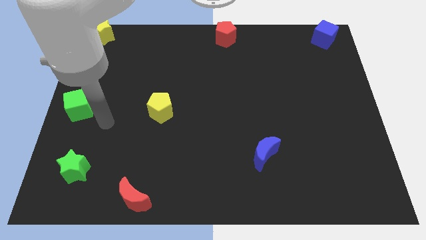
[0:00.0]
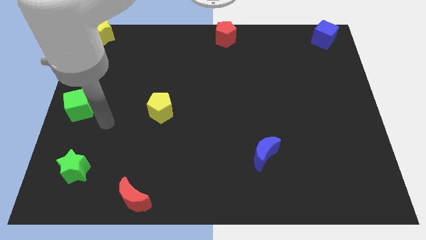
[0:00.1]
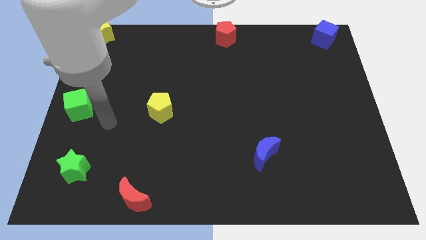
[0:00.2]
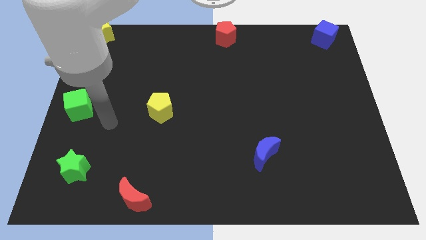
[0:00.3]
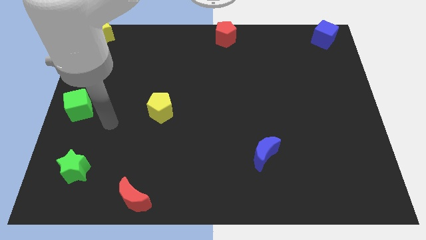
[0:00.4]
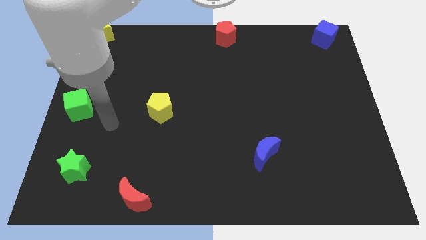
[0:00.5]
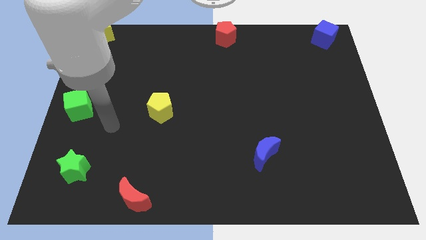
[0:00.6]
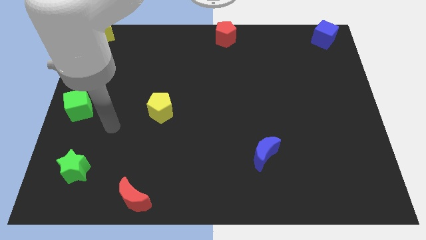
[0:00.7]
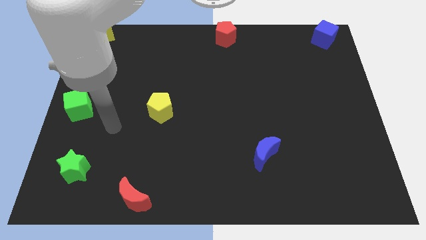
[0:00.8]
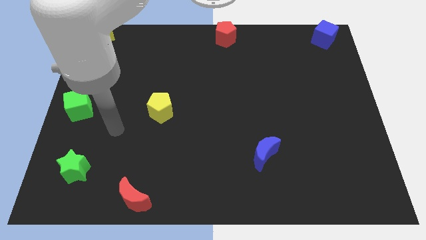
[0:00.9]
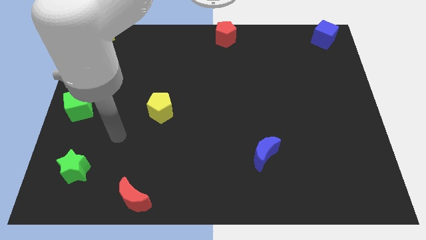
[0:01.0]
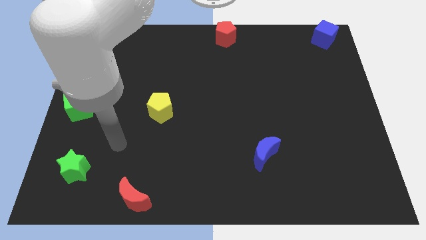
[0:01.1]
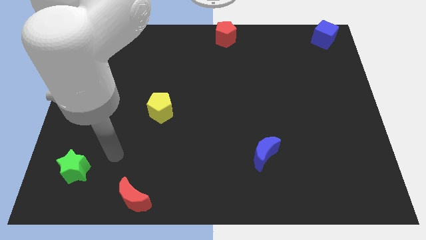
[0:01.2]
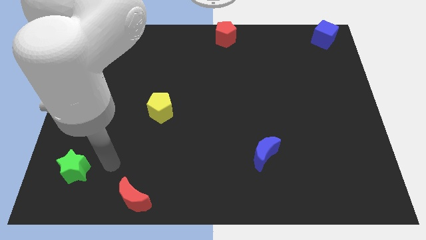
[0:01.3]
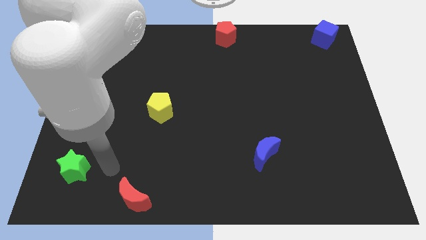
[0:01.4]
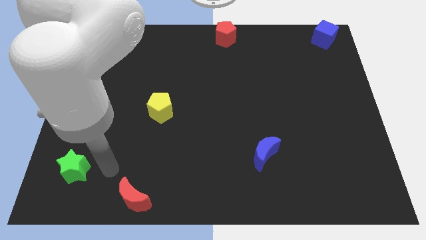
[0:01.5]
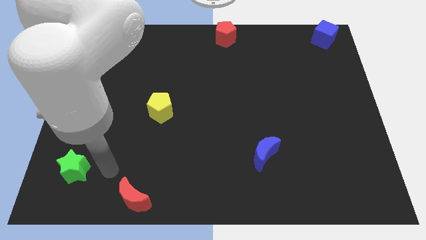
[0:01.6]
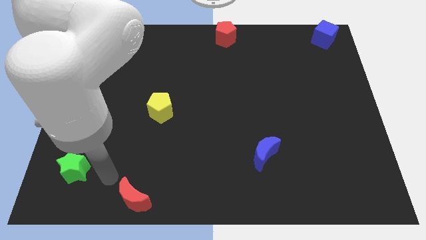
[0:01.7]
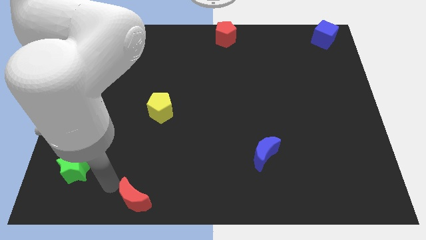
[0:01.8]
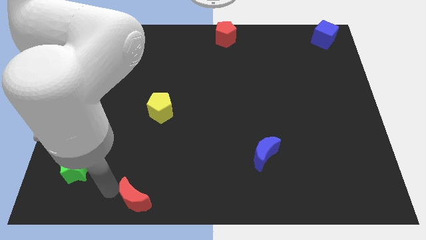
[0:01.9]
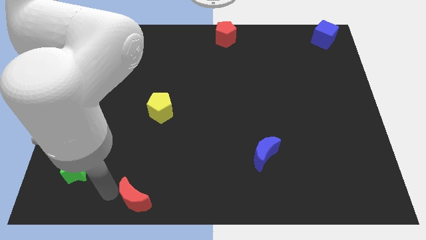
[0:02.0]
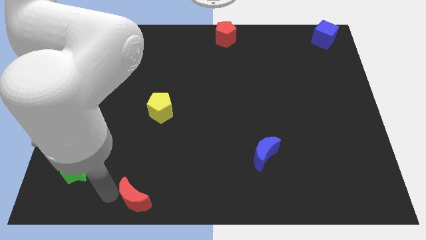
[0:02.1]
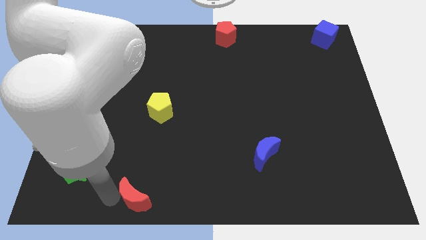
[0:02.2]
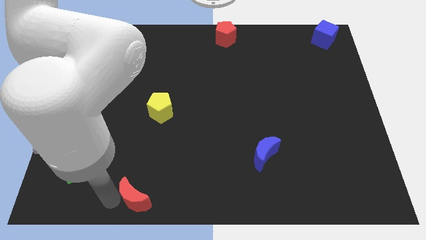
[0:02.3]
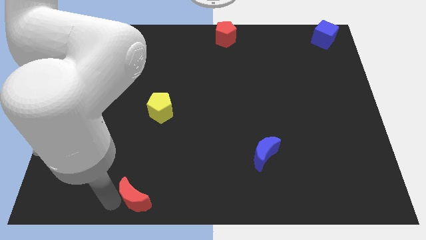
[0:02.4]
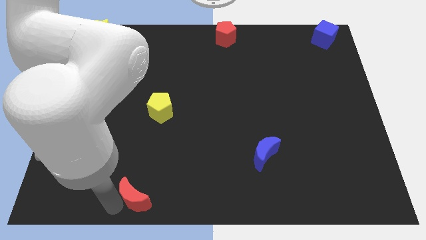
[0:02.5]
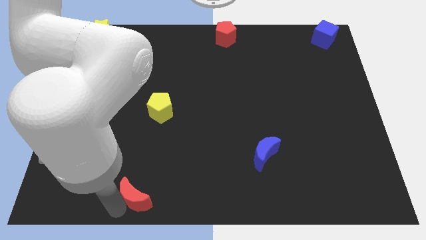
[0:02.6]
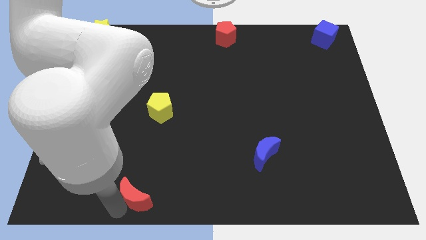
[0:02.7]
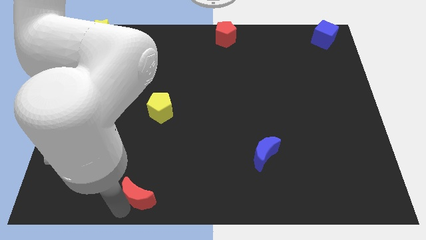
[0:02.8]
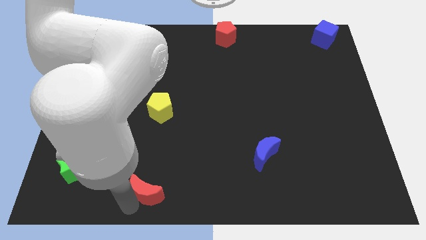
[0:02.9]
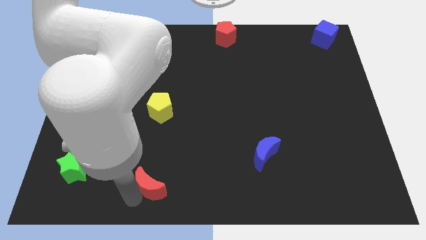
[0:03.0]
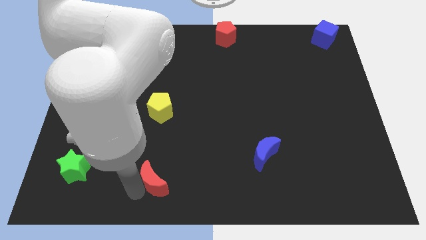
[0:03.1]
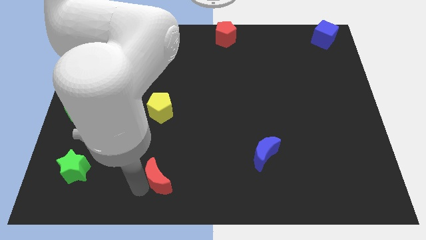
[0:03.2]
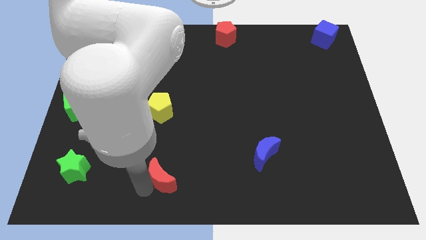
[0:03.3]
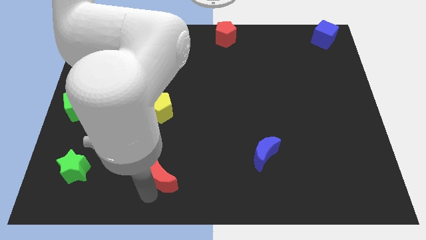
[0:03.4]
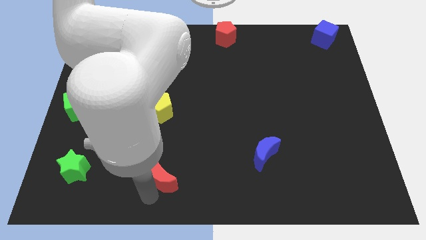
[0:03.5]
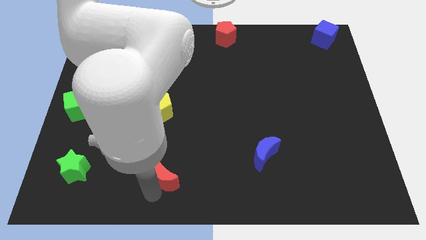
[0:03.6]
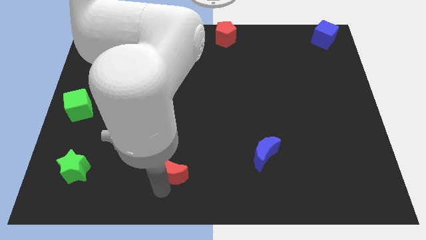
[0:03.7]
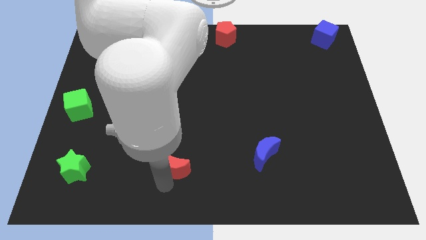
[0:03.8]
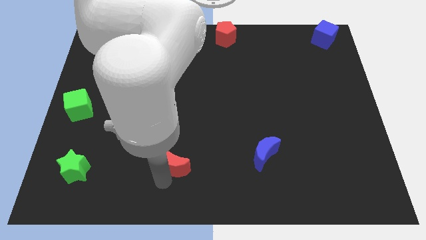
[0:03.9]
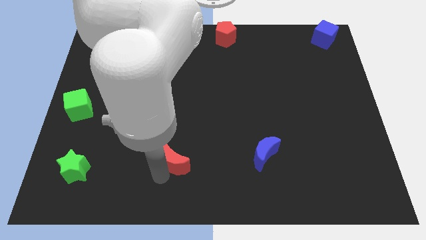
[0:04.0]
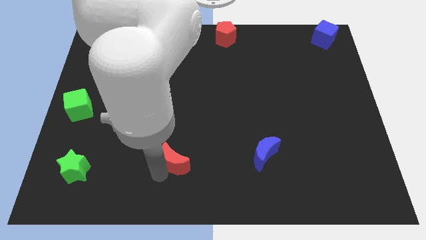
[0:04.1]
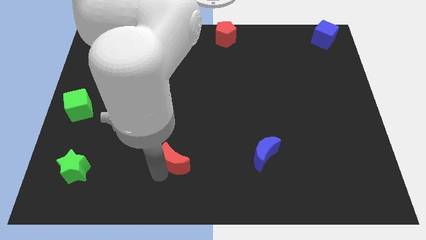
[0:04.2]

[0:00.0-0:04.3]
move red crescent up

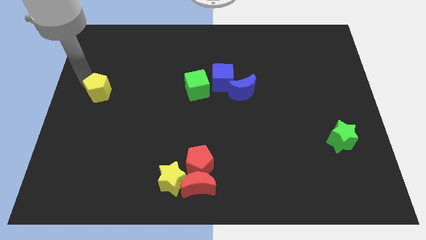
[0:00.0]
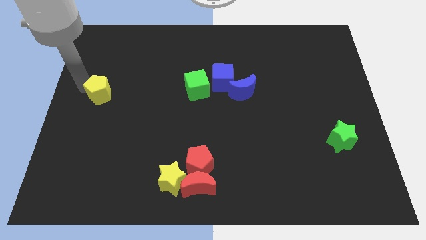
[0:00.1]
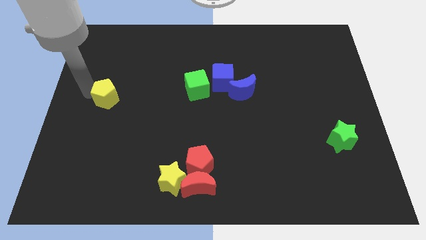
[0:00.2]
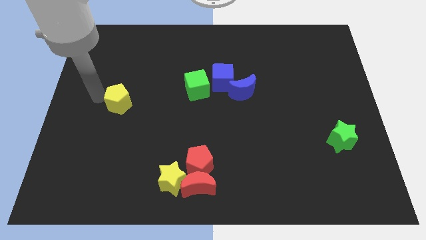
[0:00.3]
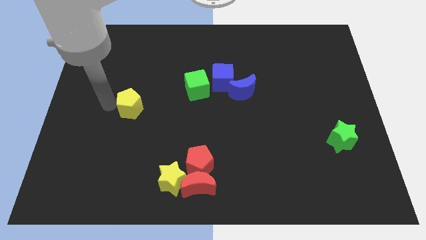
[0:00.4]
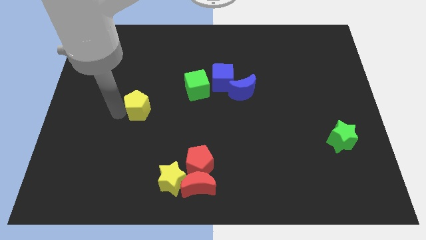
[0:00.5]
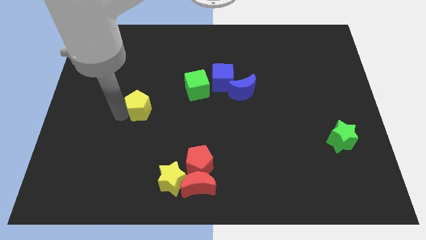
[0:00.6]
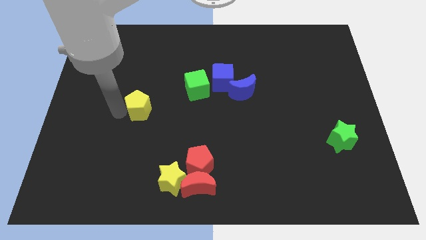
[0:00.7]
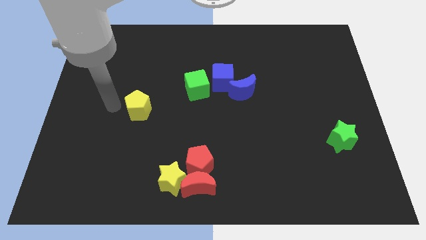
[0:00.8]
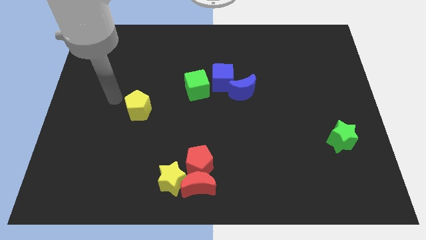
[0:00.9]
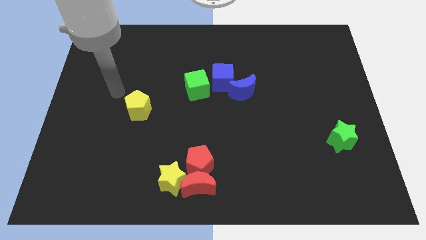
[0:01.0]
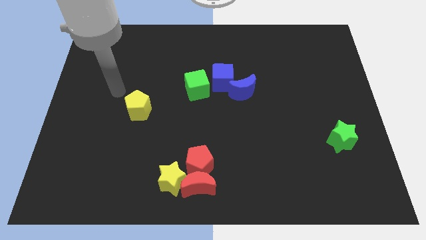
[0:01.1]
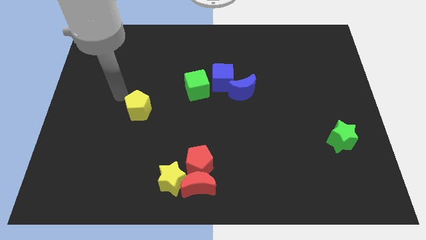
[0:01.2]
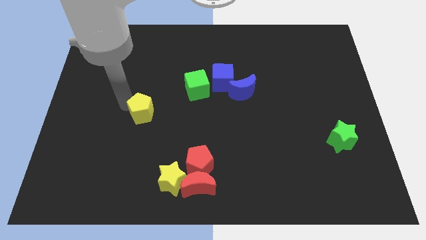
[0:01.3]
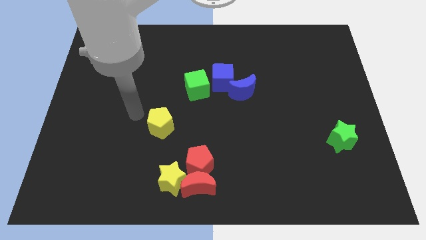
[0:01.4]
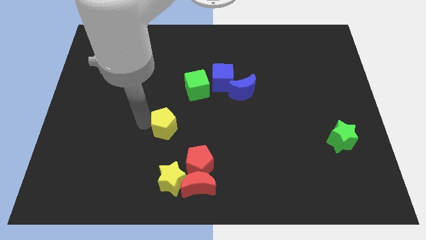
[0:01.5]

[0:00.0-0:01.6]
move the yellow pentagon towards the top side of the red pentagon

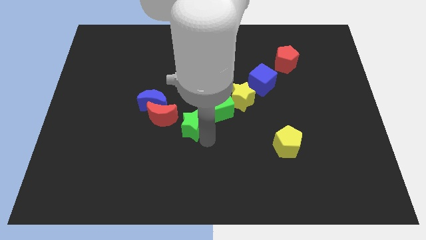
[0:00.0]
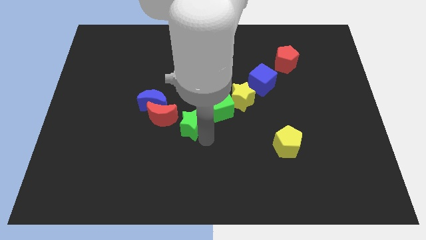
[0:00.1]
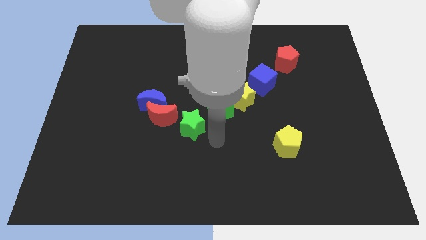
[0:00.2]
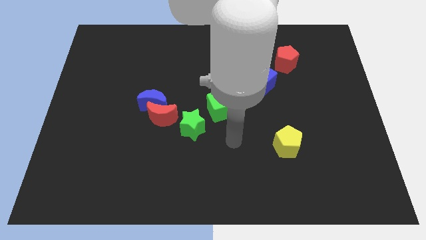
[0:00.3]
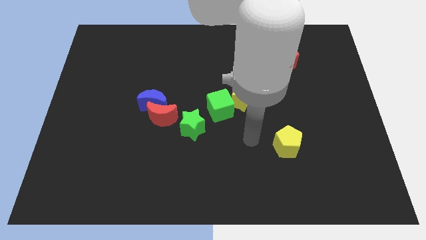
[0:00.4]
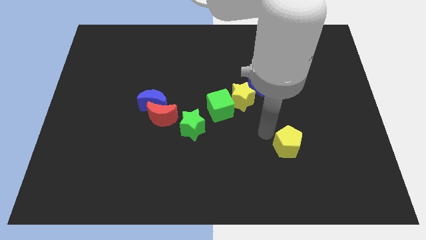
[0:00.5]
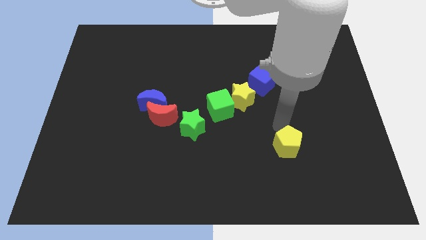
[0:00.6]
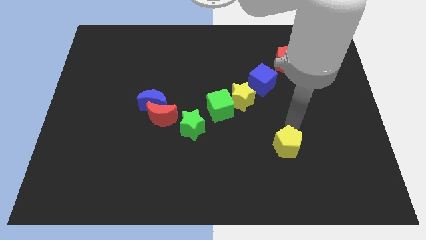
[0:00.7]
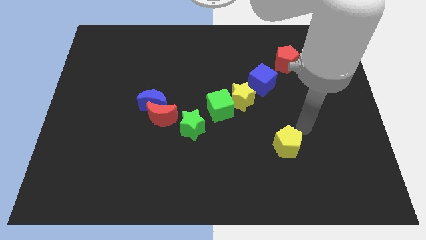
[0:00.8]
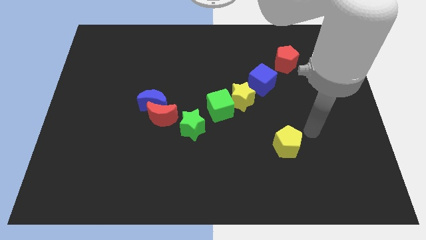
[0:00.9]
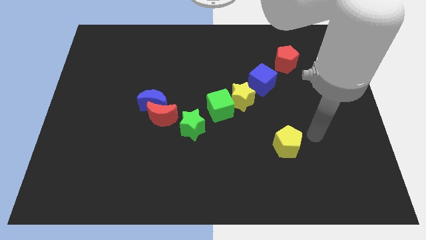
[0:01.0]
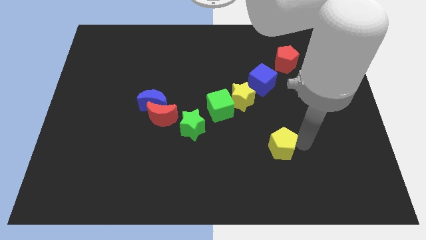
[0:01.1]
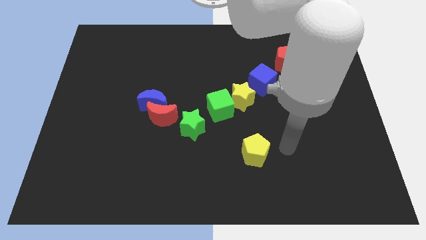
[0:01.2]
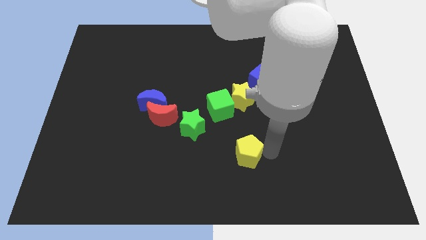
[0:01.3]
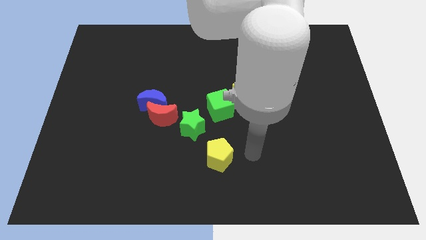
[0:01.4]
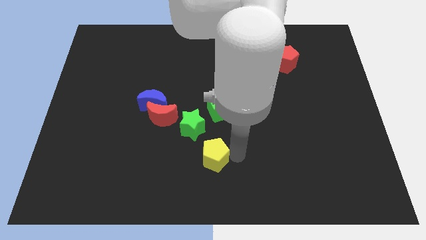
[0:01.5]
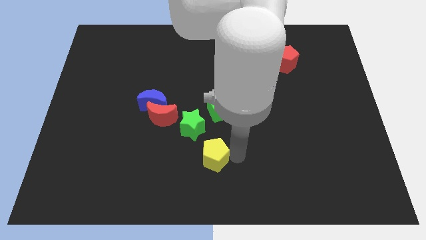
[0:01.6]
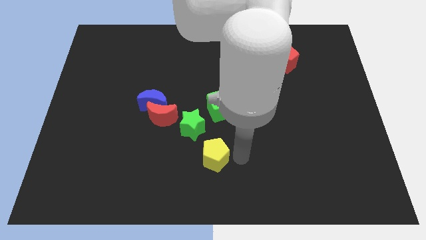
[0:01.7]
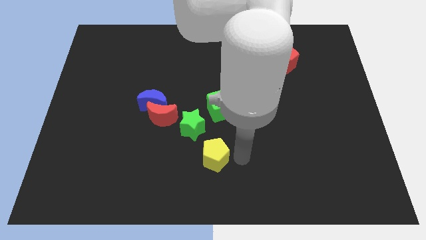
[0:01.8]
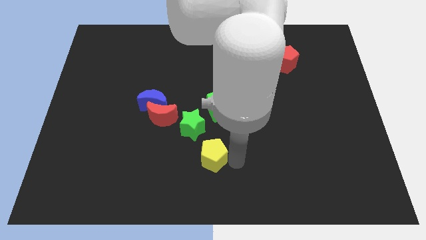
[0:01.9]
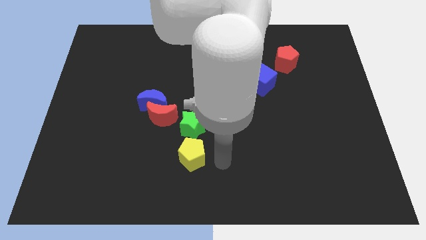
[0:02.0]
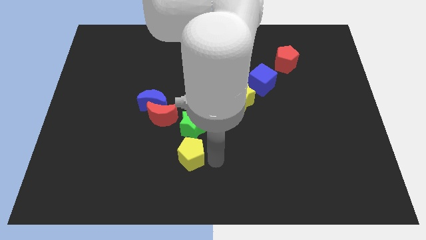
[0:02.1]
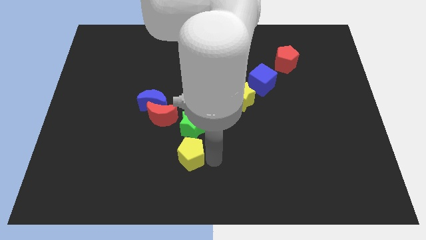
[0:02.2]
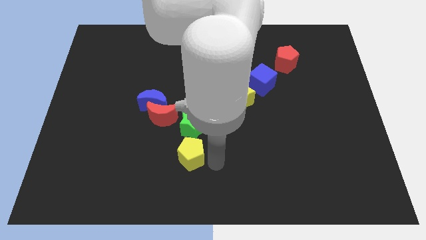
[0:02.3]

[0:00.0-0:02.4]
move the yellow pentagon below the green star

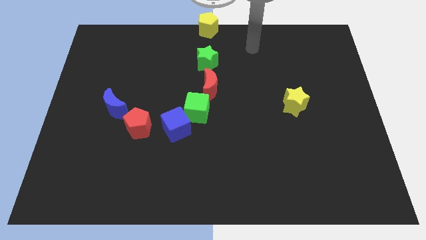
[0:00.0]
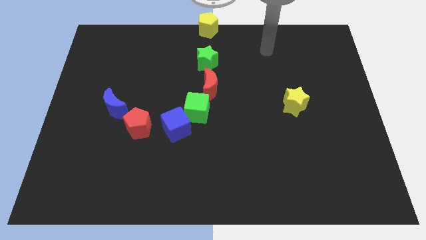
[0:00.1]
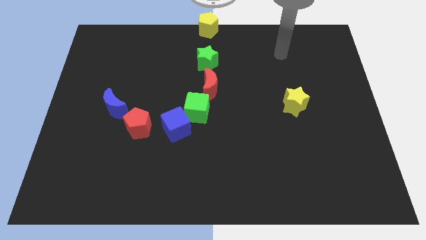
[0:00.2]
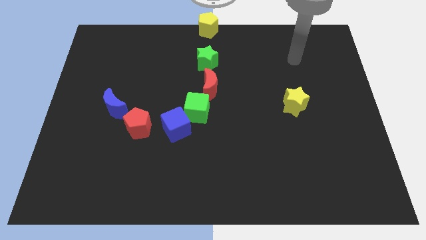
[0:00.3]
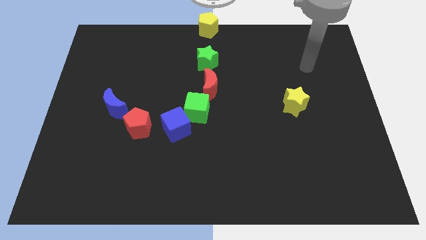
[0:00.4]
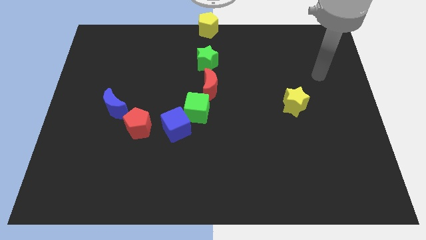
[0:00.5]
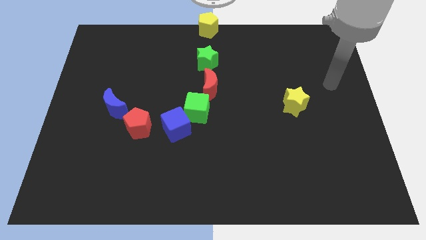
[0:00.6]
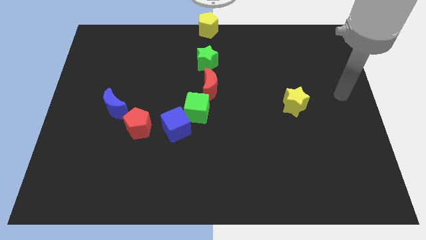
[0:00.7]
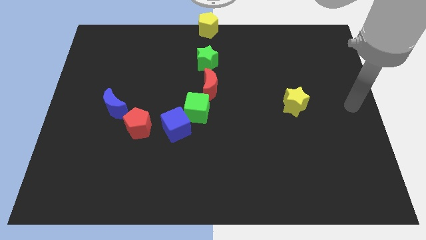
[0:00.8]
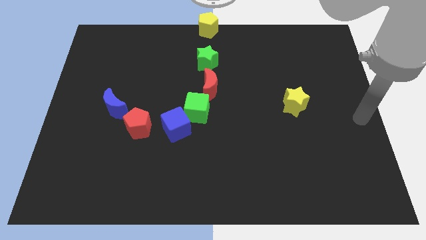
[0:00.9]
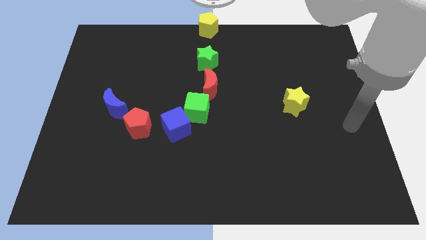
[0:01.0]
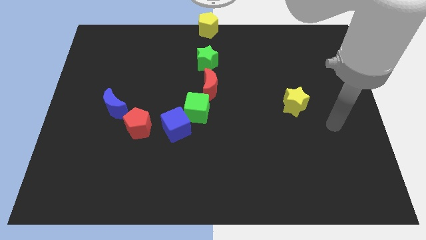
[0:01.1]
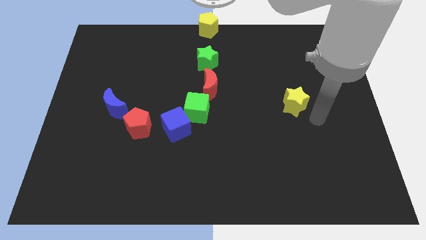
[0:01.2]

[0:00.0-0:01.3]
move your arm towards the yellow star
